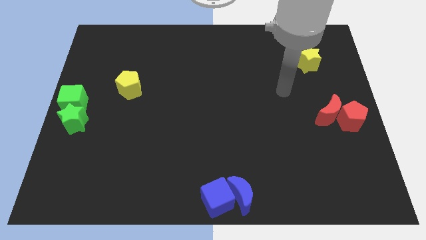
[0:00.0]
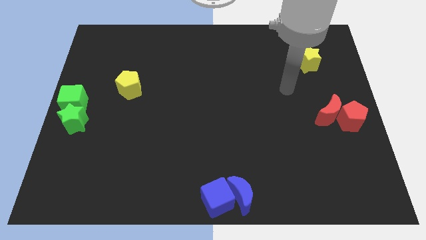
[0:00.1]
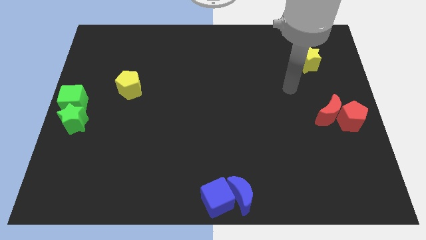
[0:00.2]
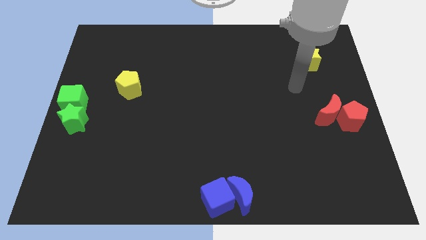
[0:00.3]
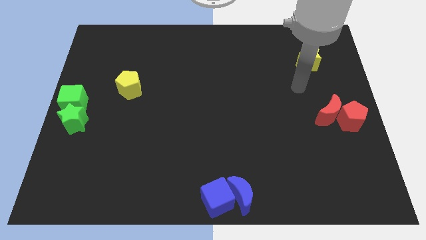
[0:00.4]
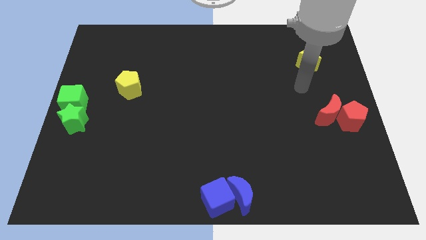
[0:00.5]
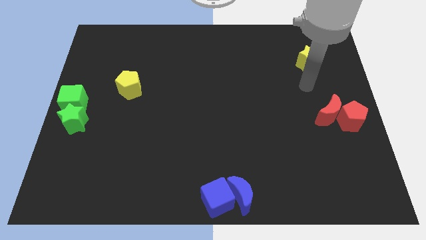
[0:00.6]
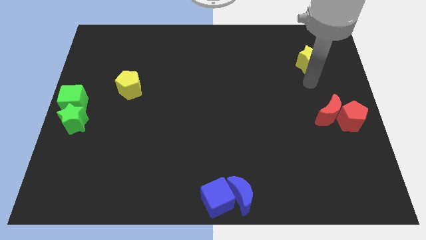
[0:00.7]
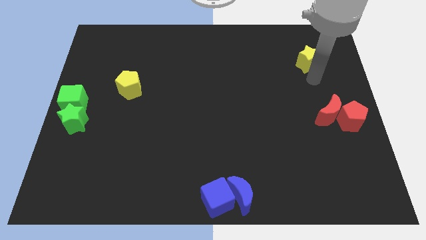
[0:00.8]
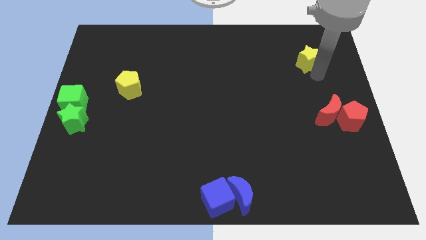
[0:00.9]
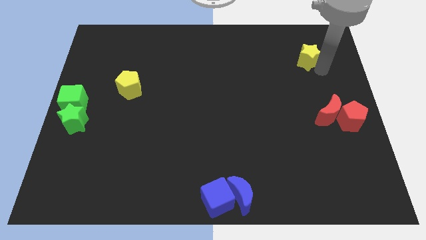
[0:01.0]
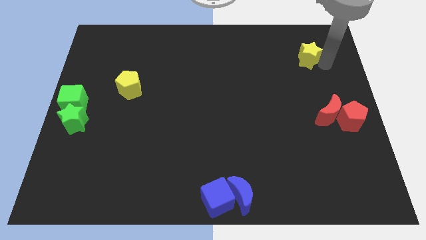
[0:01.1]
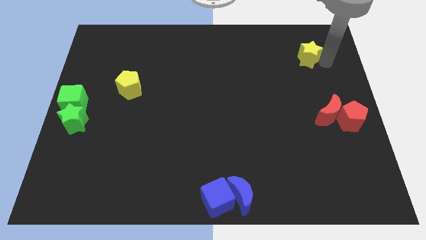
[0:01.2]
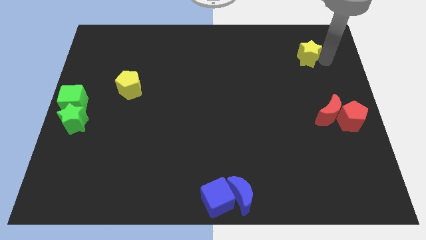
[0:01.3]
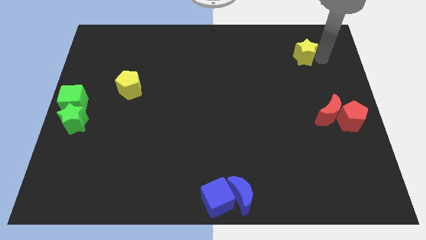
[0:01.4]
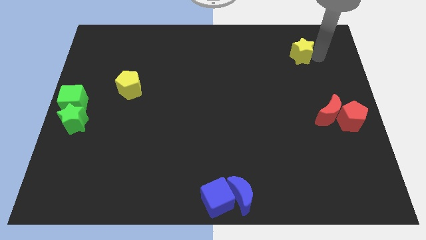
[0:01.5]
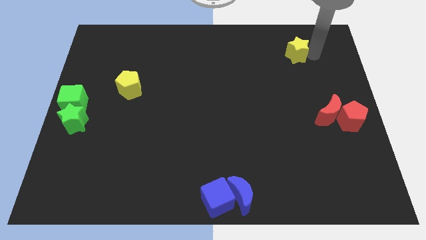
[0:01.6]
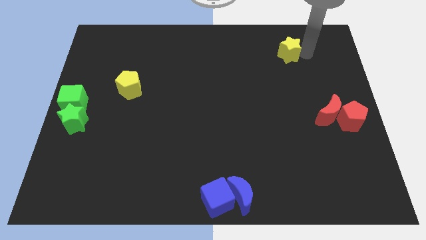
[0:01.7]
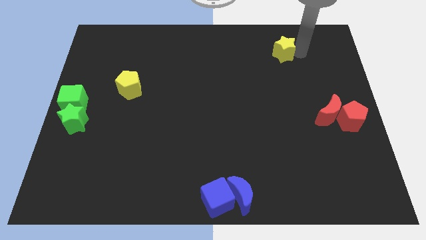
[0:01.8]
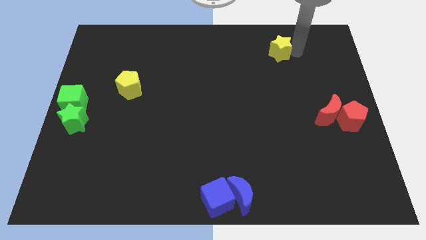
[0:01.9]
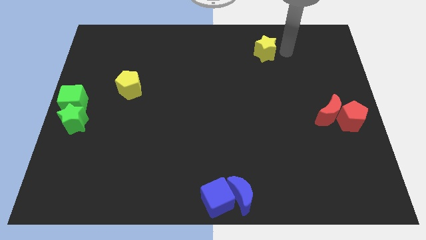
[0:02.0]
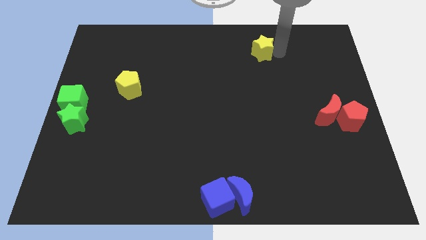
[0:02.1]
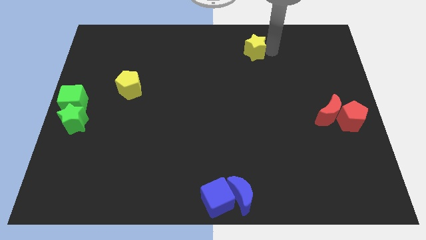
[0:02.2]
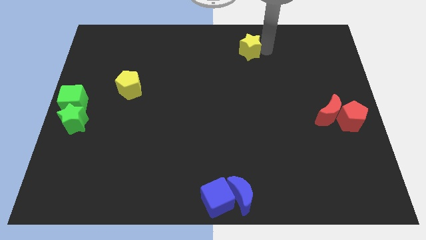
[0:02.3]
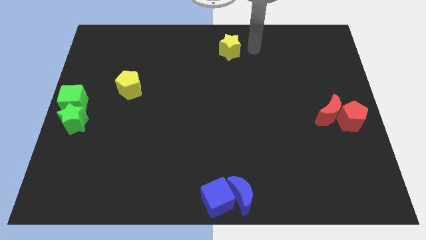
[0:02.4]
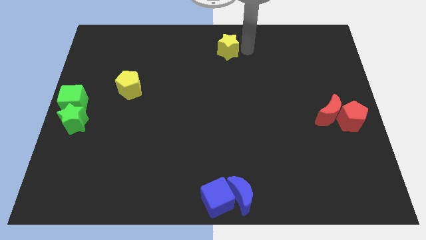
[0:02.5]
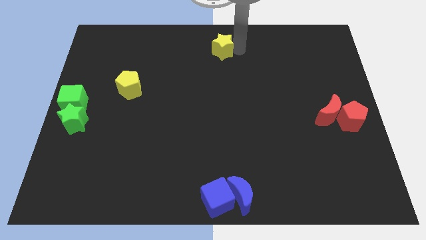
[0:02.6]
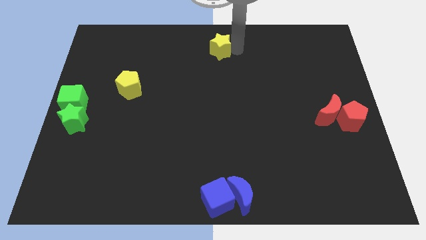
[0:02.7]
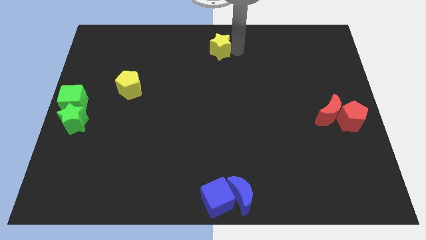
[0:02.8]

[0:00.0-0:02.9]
place a yellow star on the top center of the board

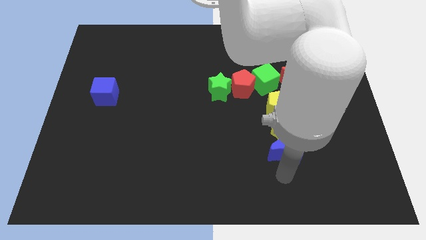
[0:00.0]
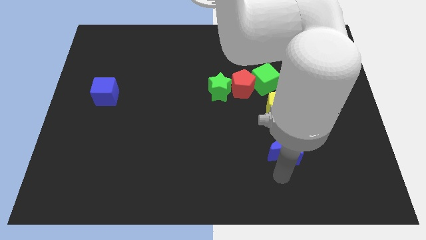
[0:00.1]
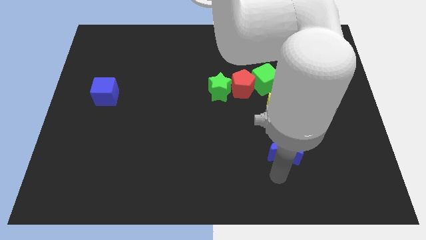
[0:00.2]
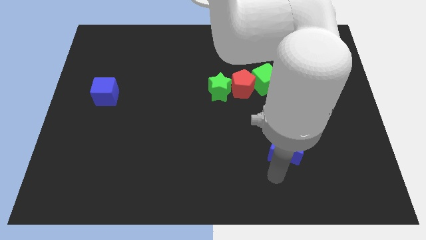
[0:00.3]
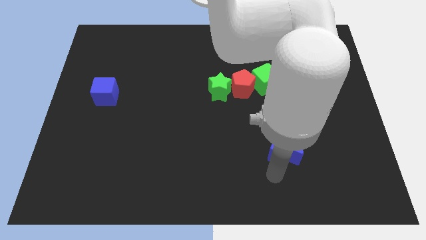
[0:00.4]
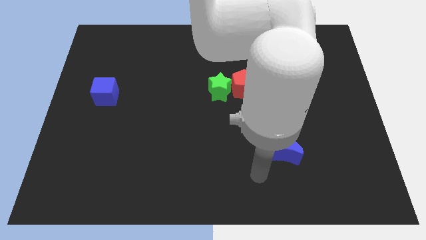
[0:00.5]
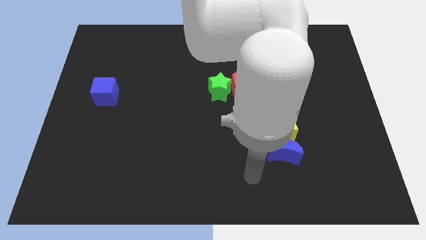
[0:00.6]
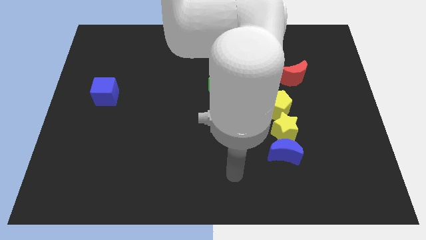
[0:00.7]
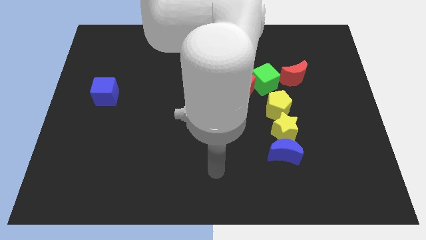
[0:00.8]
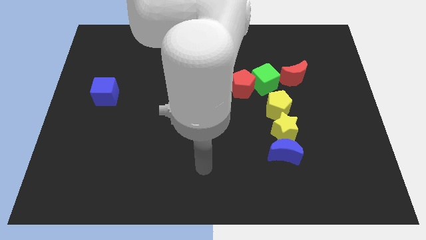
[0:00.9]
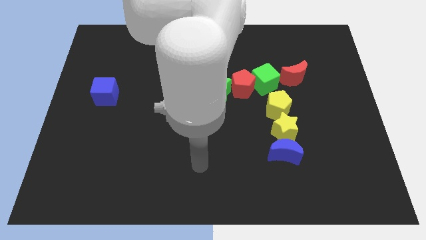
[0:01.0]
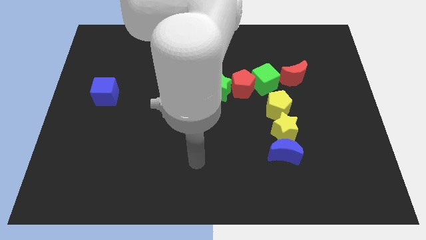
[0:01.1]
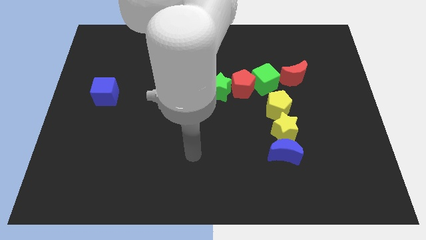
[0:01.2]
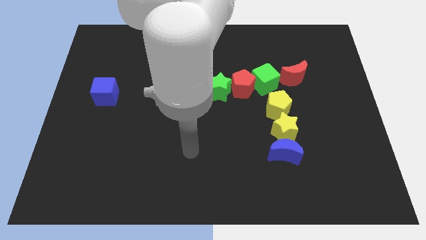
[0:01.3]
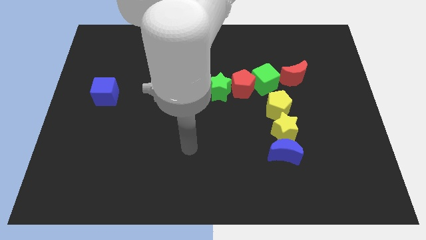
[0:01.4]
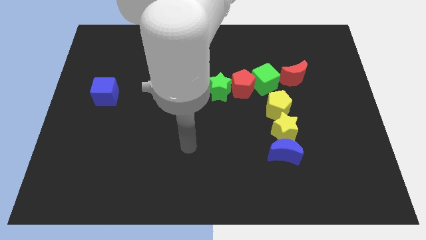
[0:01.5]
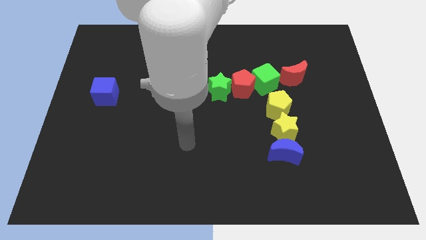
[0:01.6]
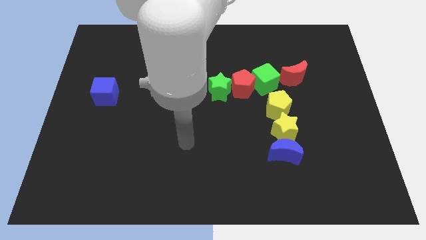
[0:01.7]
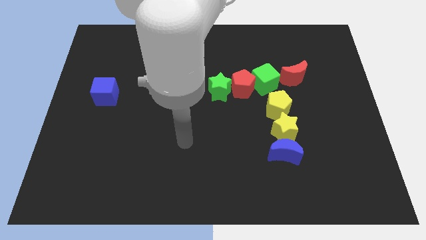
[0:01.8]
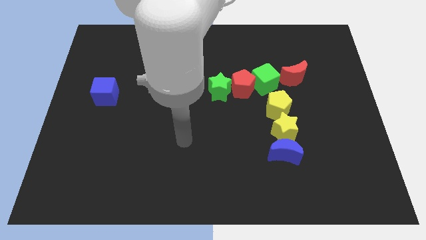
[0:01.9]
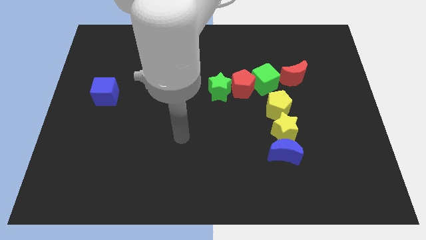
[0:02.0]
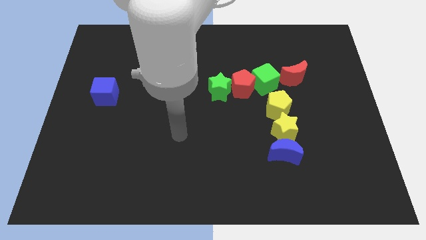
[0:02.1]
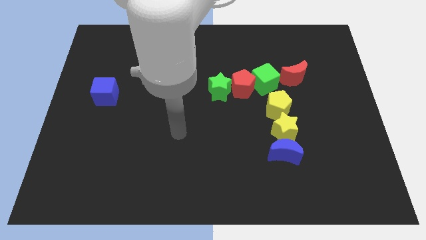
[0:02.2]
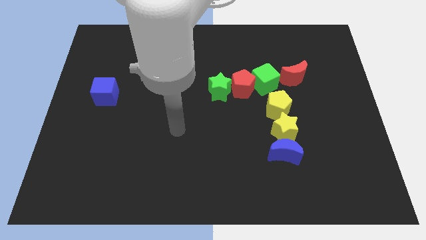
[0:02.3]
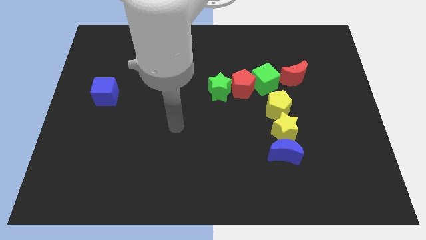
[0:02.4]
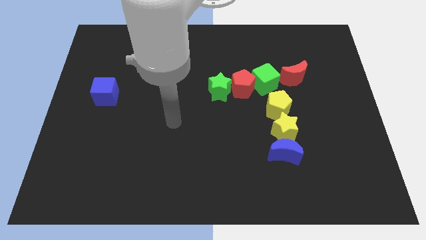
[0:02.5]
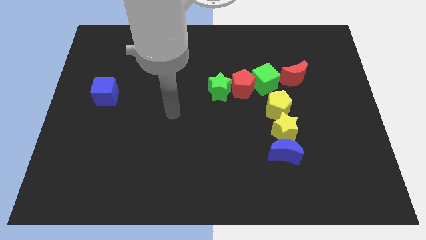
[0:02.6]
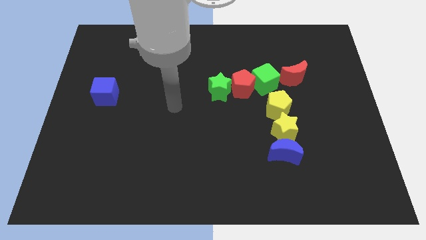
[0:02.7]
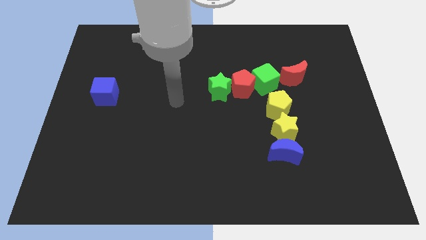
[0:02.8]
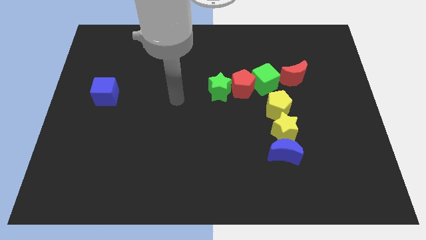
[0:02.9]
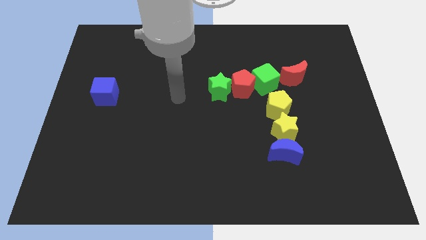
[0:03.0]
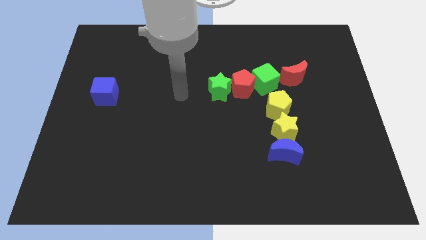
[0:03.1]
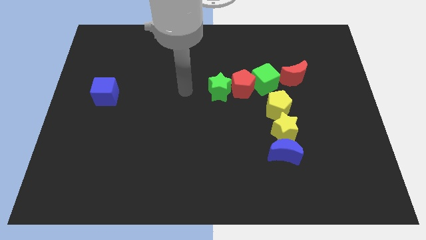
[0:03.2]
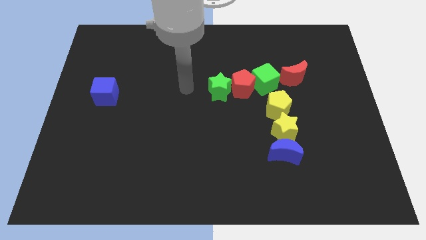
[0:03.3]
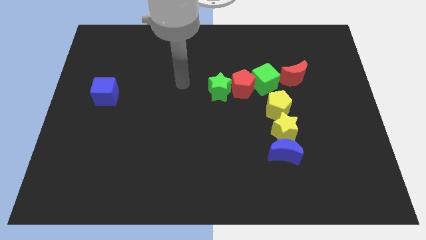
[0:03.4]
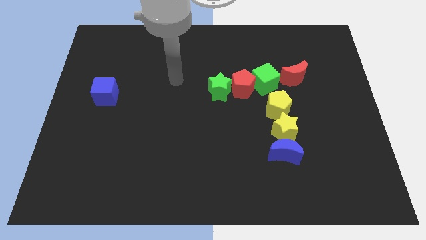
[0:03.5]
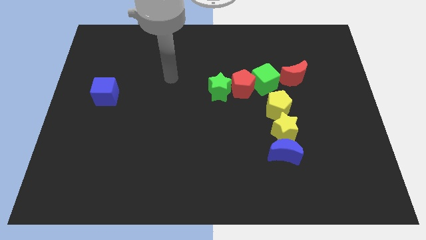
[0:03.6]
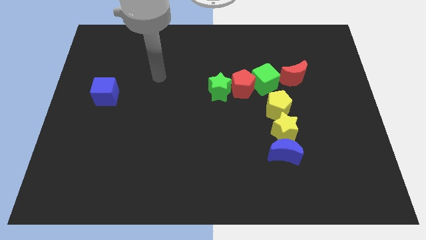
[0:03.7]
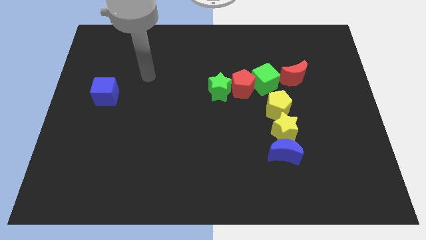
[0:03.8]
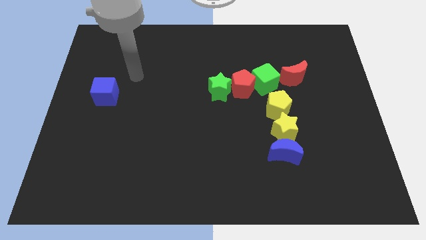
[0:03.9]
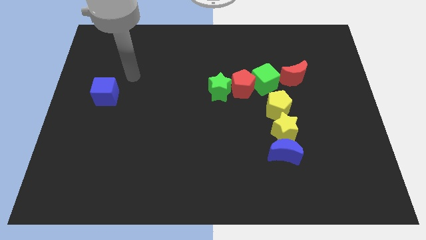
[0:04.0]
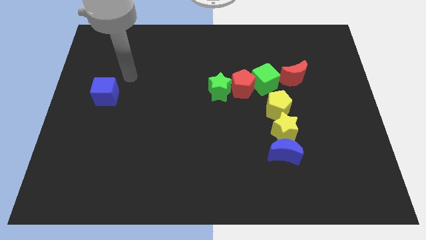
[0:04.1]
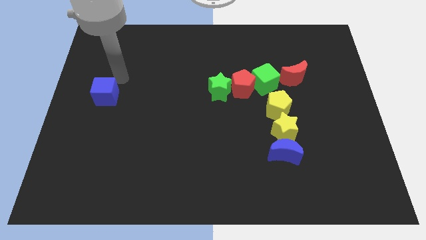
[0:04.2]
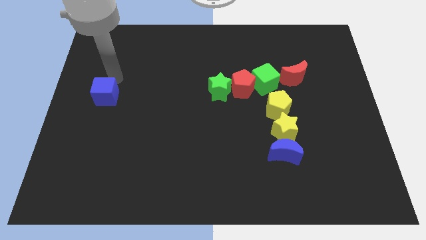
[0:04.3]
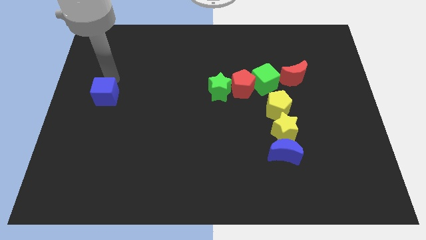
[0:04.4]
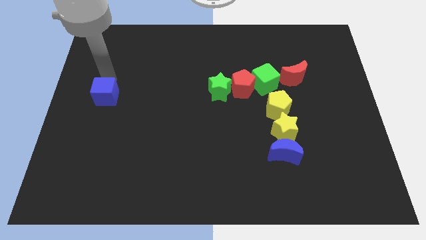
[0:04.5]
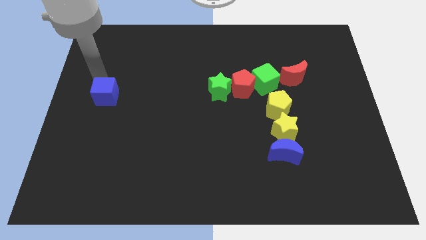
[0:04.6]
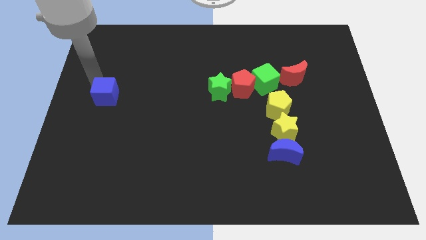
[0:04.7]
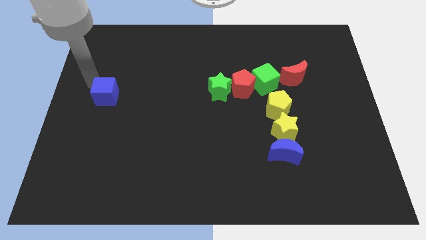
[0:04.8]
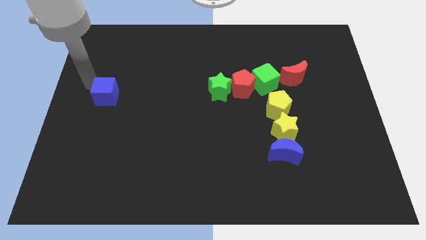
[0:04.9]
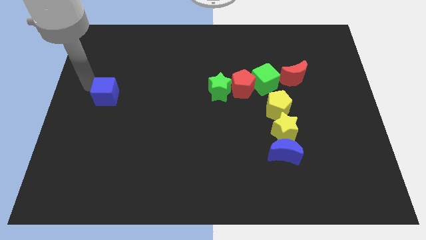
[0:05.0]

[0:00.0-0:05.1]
place the arm close to the blue cube

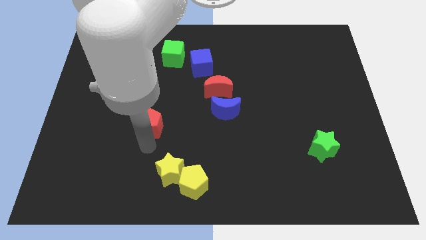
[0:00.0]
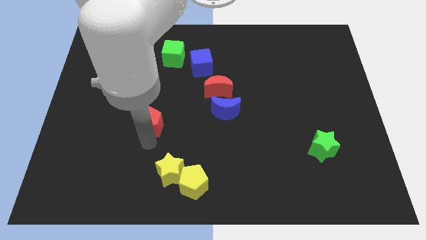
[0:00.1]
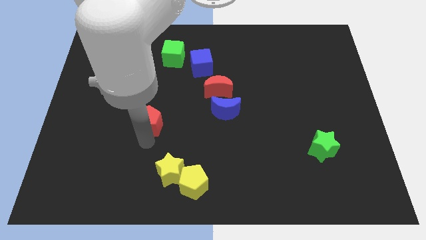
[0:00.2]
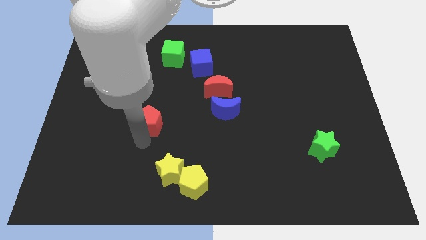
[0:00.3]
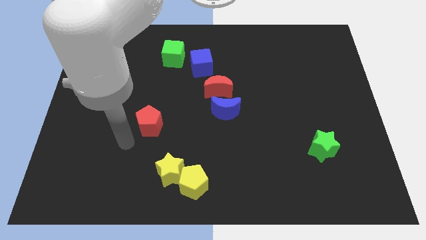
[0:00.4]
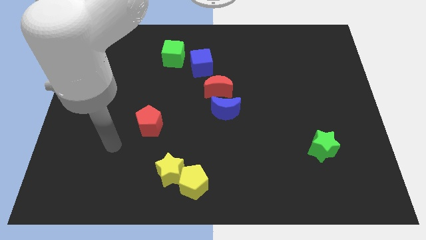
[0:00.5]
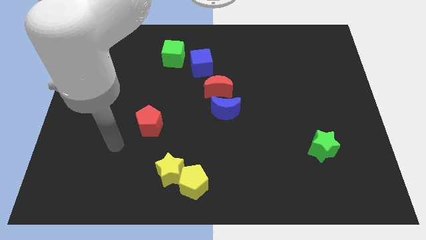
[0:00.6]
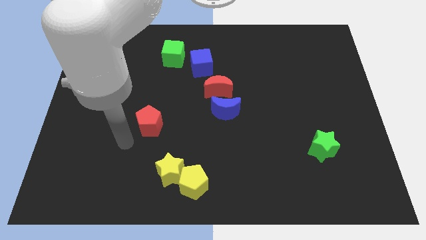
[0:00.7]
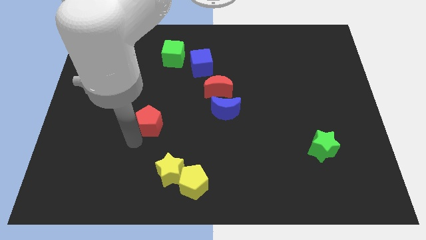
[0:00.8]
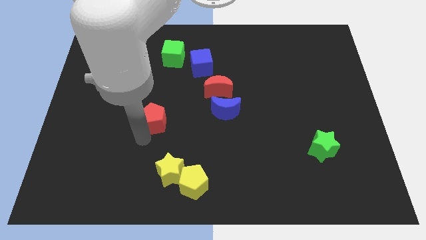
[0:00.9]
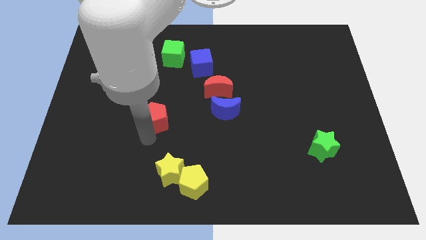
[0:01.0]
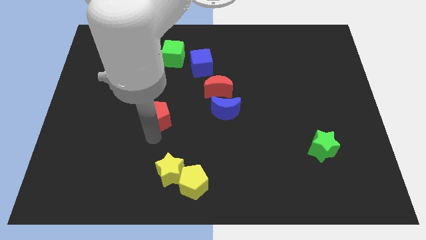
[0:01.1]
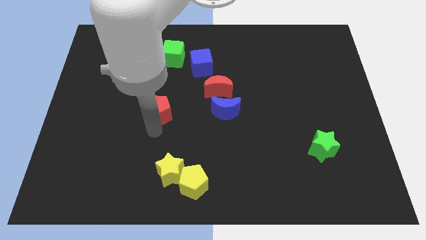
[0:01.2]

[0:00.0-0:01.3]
place the red pentagon above the yellow star
